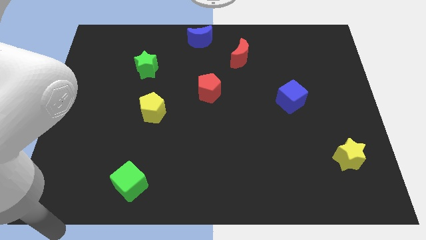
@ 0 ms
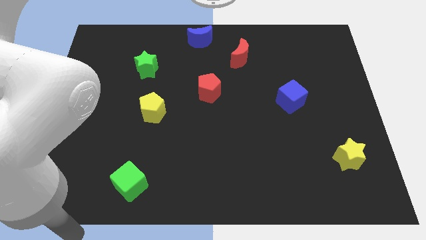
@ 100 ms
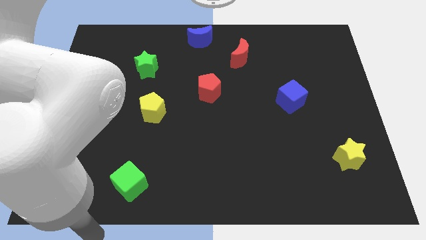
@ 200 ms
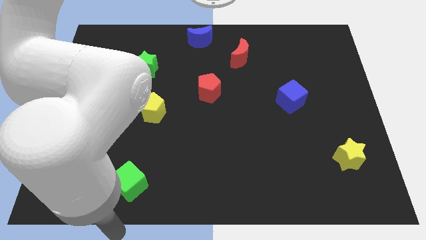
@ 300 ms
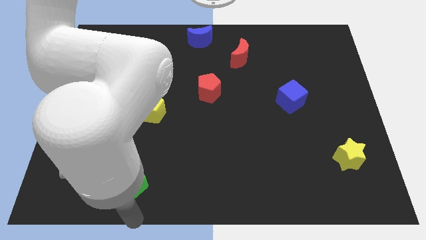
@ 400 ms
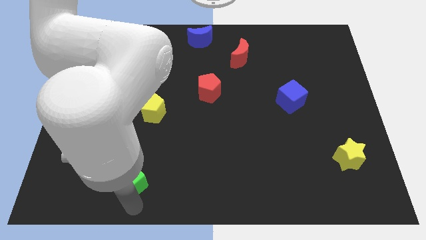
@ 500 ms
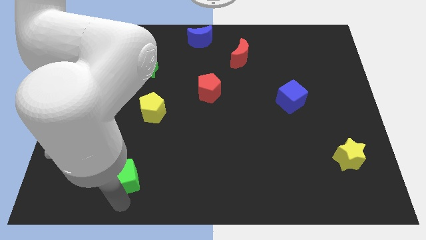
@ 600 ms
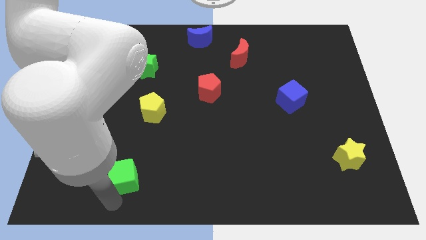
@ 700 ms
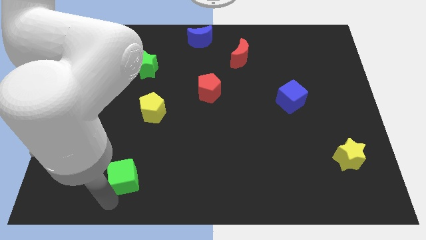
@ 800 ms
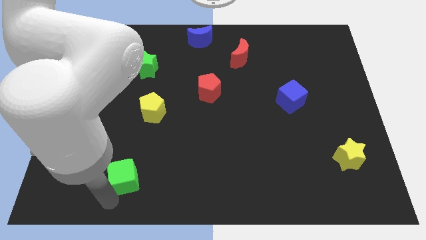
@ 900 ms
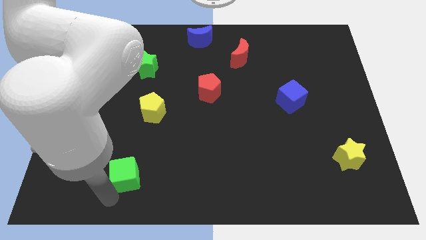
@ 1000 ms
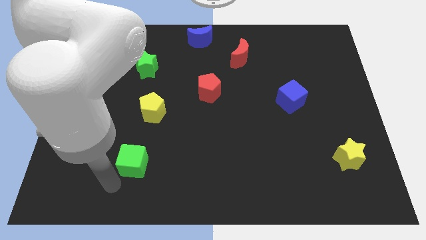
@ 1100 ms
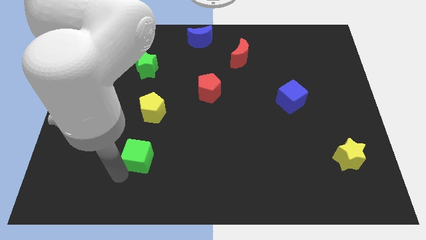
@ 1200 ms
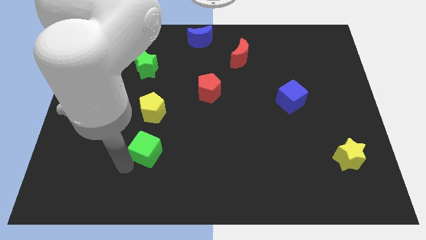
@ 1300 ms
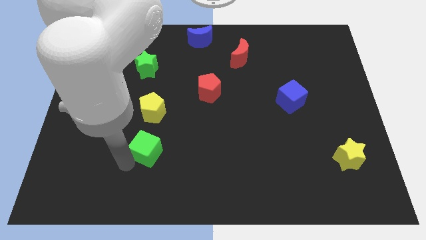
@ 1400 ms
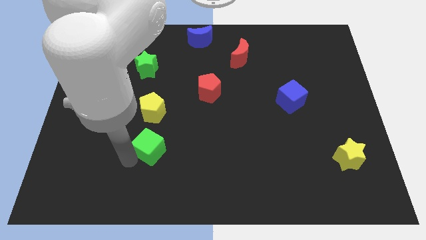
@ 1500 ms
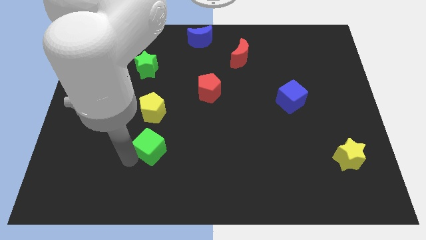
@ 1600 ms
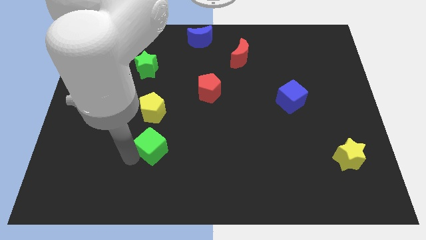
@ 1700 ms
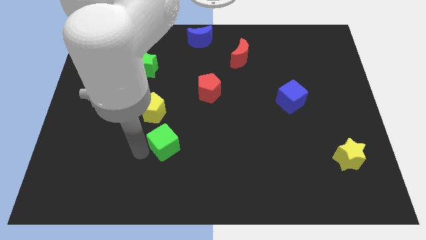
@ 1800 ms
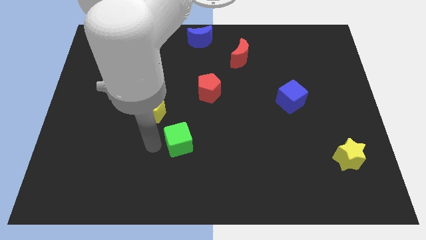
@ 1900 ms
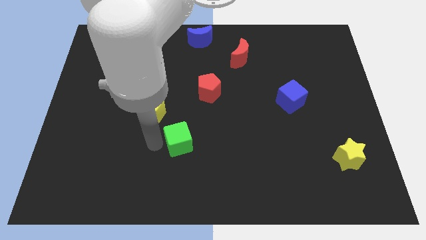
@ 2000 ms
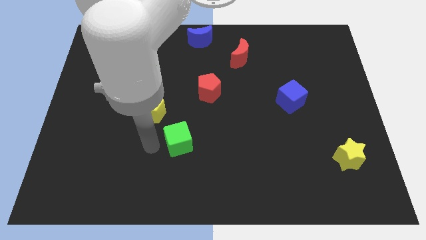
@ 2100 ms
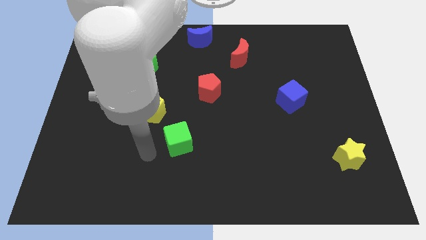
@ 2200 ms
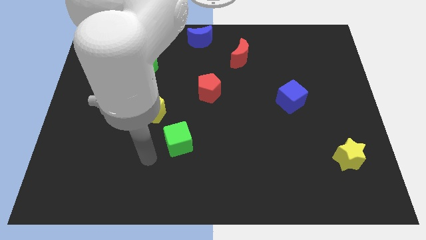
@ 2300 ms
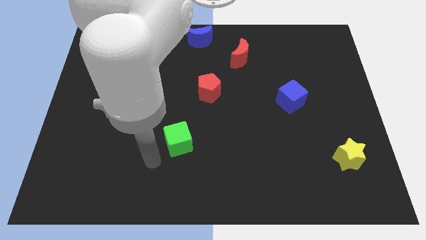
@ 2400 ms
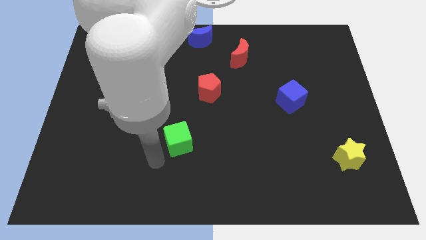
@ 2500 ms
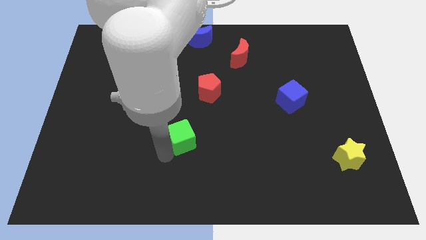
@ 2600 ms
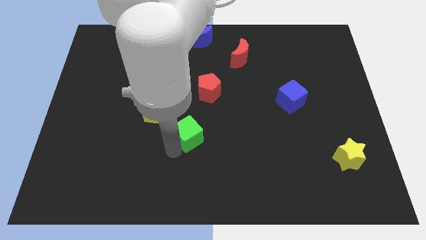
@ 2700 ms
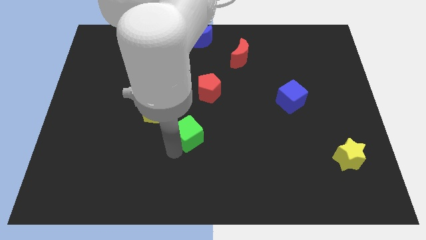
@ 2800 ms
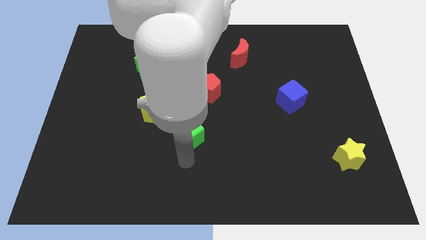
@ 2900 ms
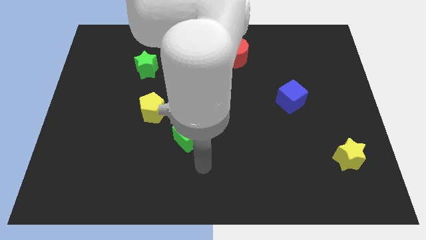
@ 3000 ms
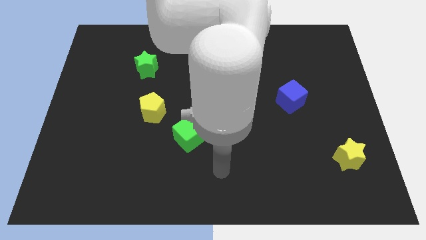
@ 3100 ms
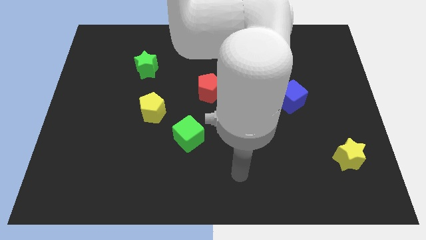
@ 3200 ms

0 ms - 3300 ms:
move the green cube diagonally on the bottom right side of the yellow pentagon

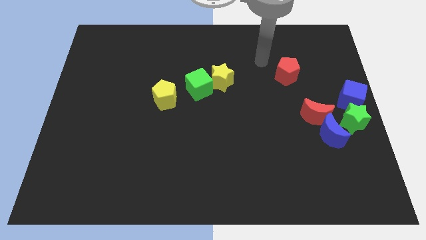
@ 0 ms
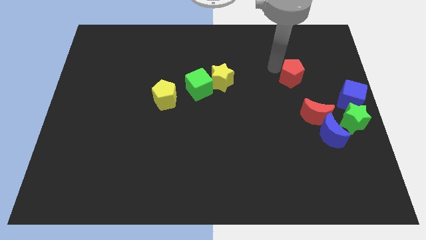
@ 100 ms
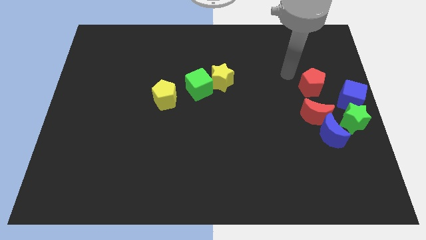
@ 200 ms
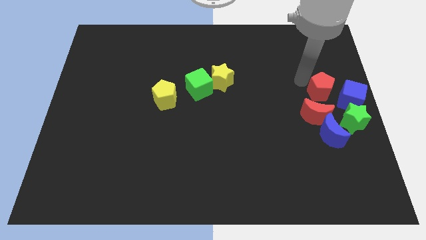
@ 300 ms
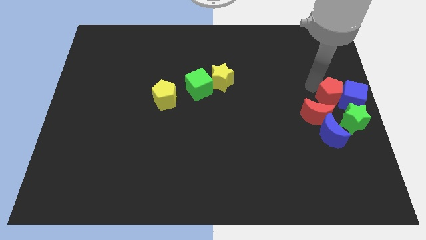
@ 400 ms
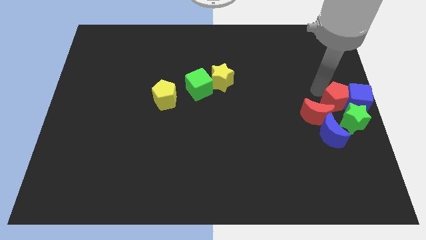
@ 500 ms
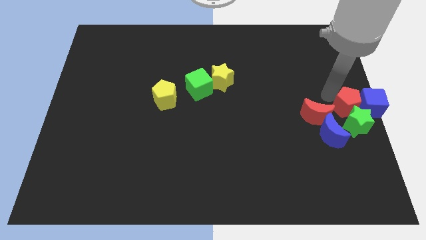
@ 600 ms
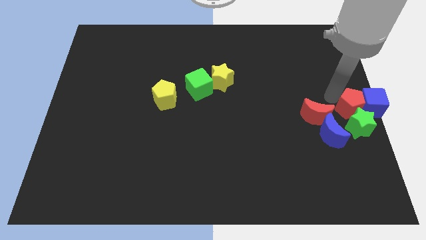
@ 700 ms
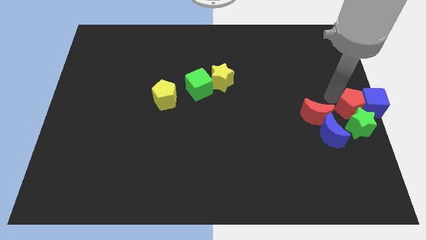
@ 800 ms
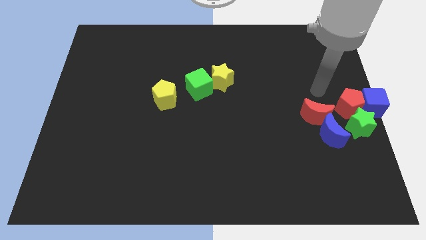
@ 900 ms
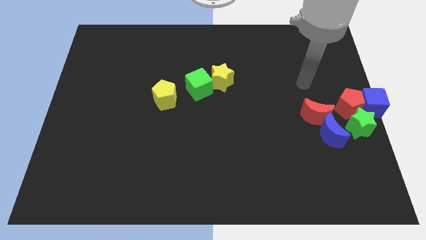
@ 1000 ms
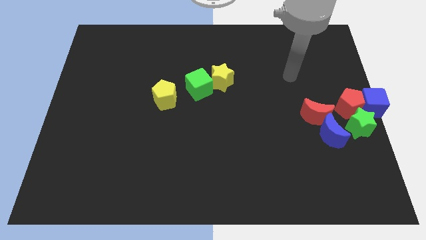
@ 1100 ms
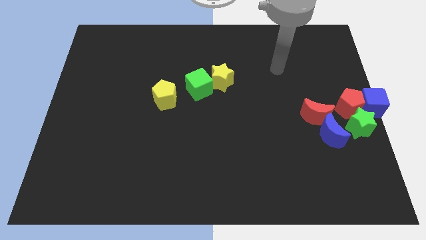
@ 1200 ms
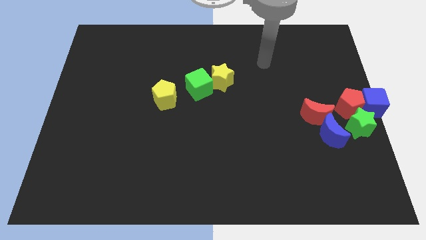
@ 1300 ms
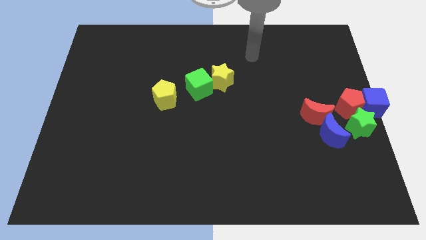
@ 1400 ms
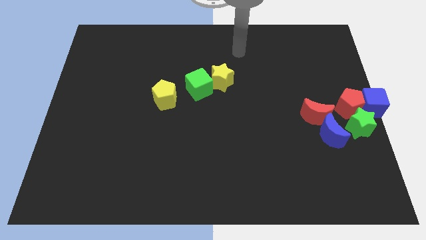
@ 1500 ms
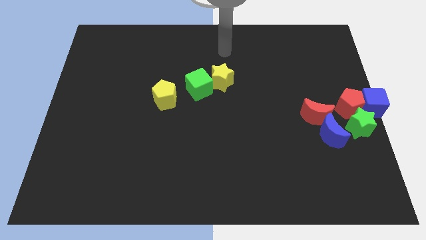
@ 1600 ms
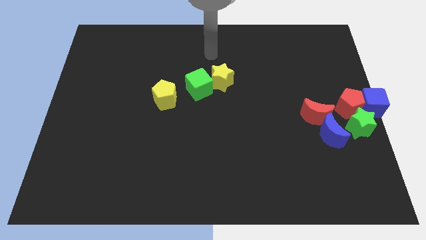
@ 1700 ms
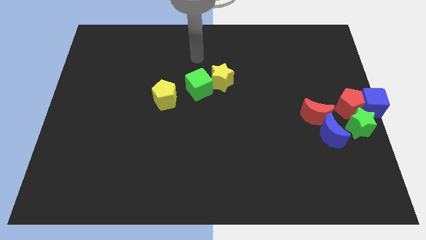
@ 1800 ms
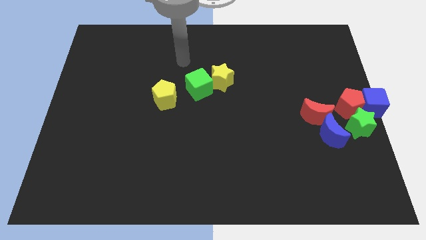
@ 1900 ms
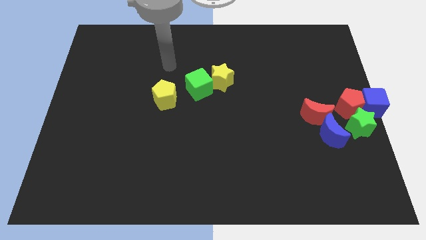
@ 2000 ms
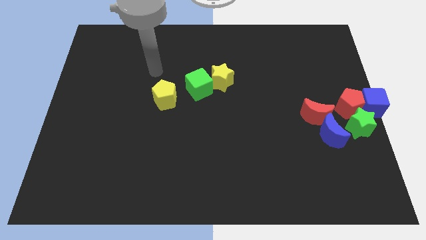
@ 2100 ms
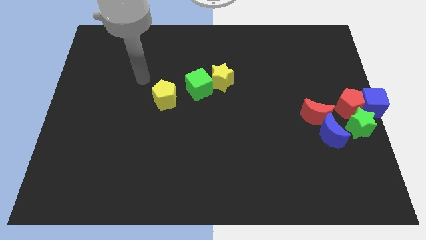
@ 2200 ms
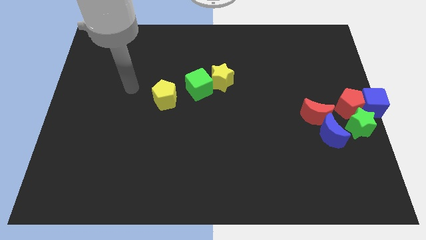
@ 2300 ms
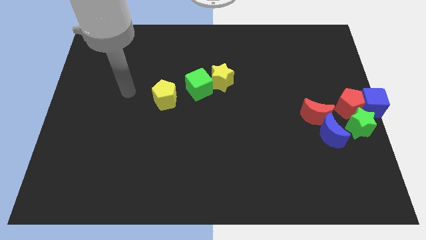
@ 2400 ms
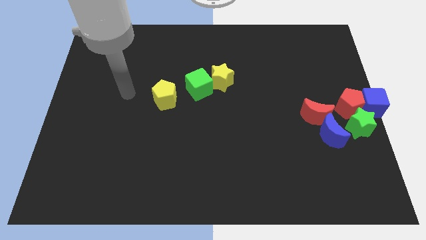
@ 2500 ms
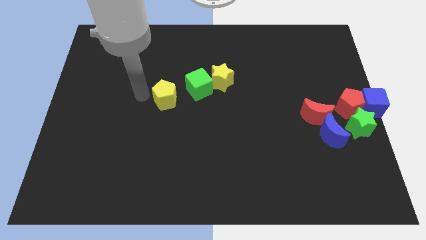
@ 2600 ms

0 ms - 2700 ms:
move the red pentagon to the group of blocks

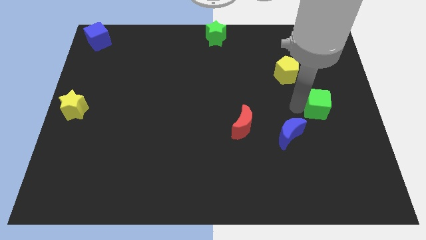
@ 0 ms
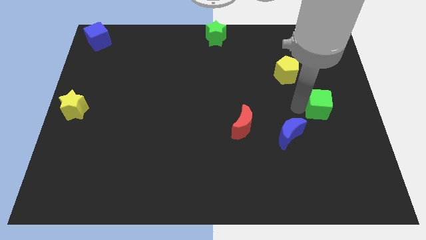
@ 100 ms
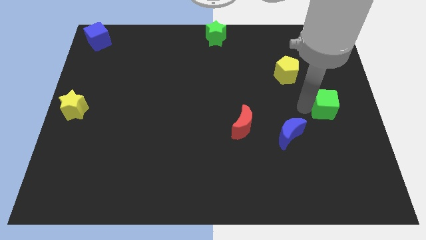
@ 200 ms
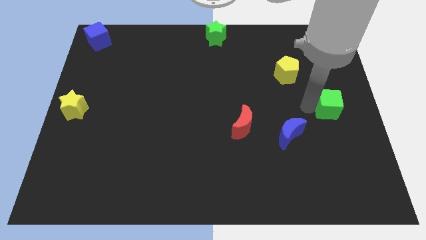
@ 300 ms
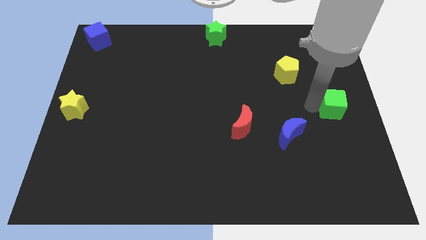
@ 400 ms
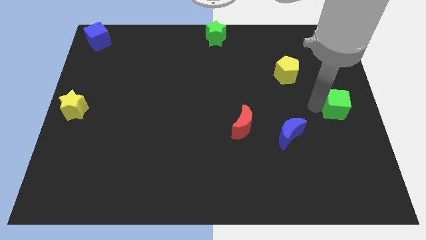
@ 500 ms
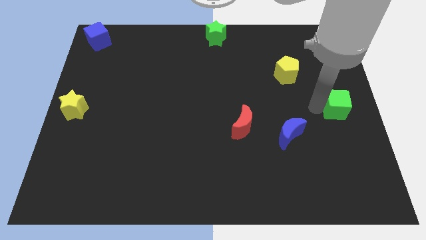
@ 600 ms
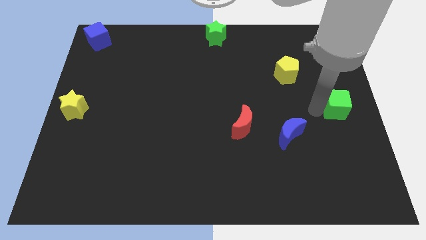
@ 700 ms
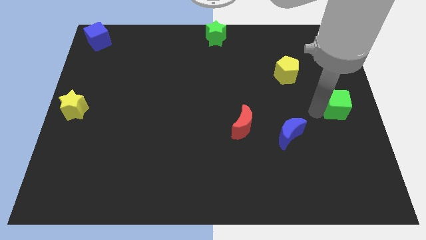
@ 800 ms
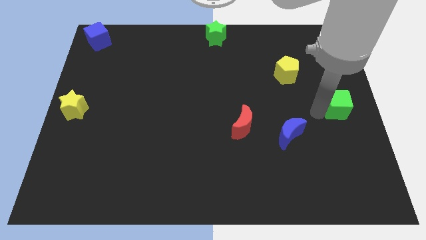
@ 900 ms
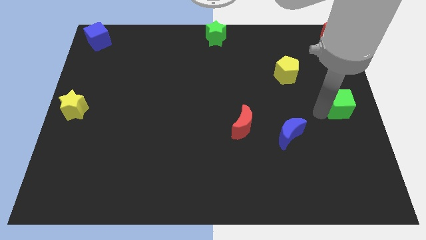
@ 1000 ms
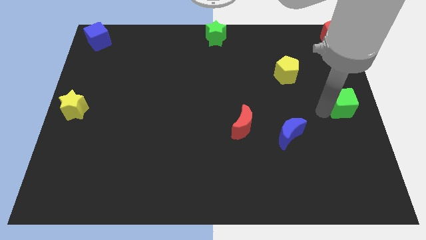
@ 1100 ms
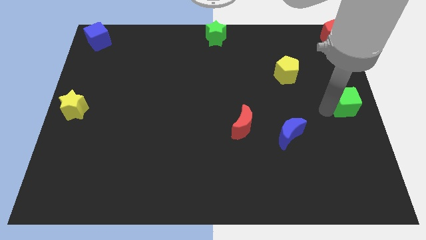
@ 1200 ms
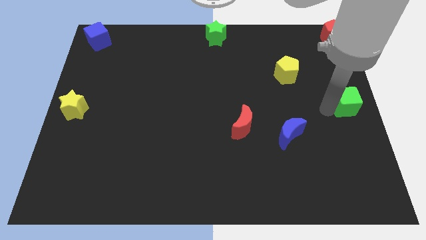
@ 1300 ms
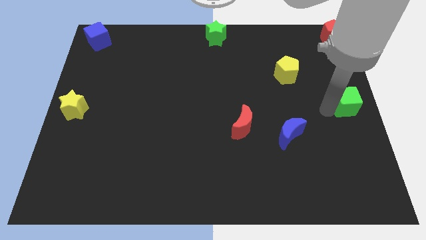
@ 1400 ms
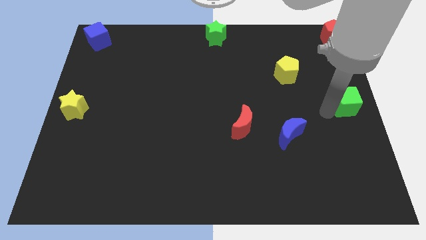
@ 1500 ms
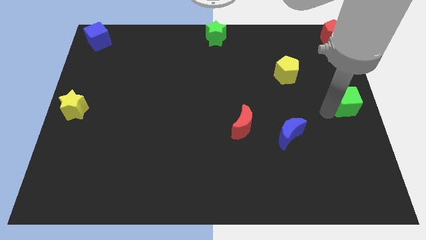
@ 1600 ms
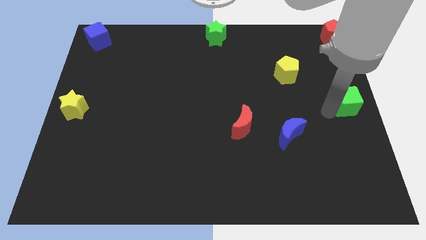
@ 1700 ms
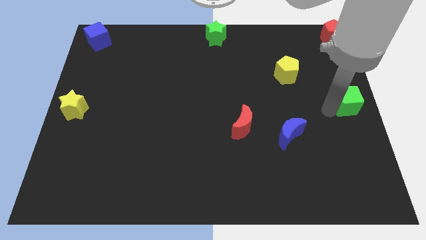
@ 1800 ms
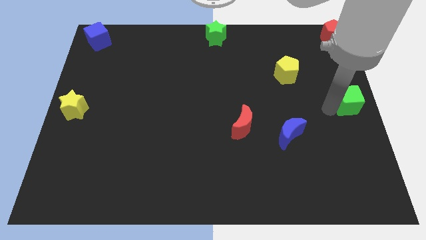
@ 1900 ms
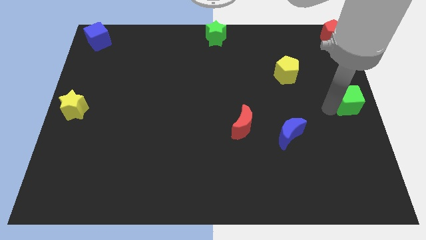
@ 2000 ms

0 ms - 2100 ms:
move the green cube to the right center of the board

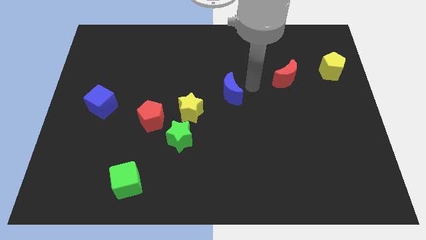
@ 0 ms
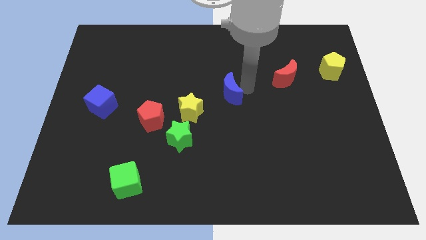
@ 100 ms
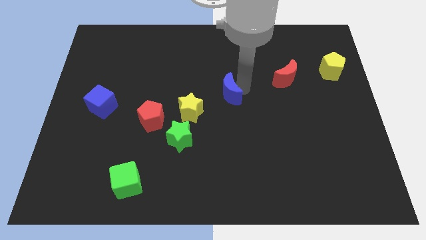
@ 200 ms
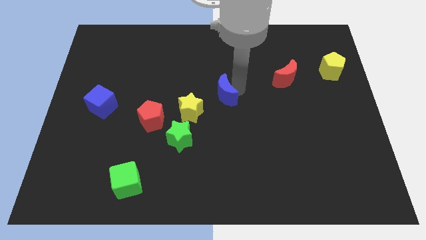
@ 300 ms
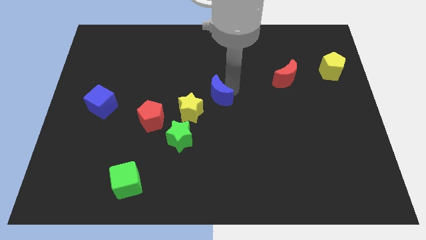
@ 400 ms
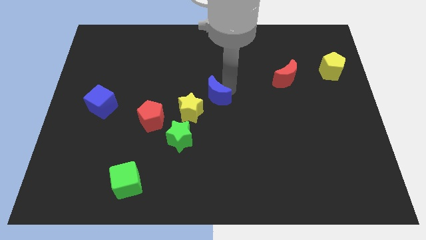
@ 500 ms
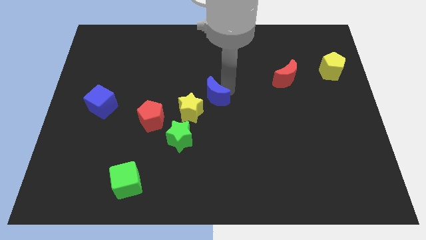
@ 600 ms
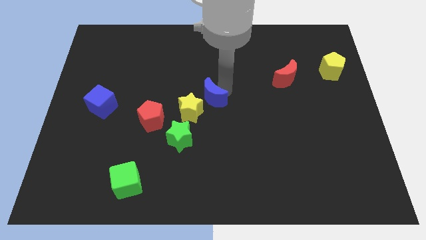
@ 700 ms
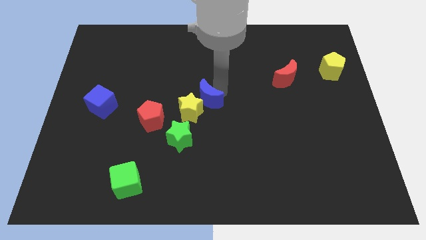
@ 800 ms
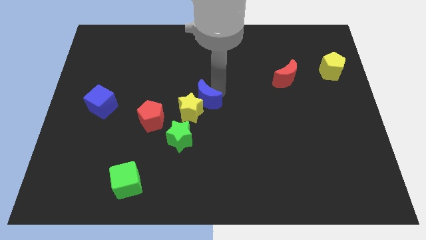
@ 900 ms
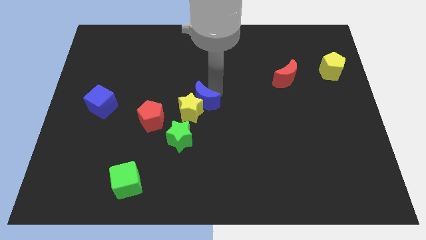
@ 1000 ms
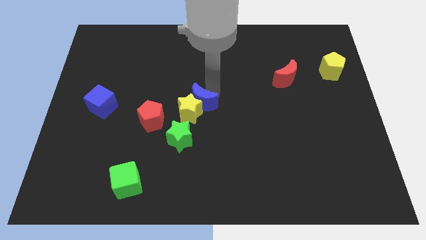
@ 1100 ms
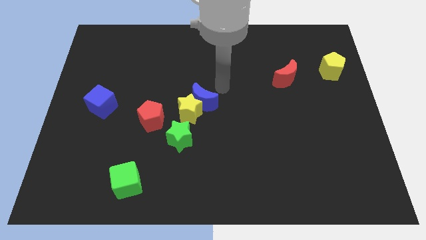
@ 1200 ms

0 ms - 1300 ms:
push the blue moon on top of yellow star diagonally
